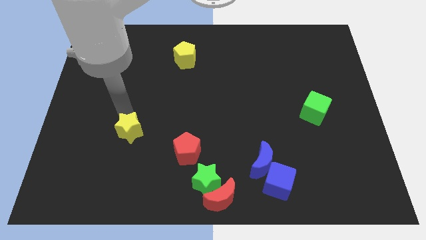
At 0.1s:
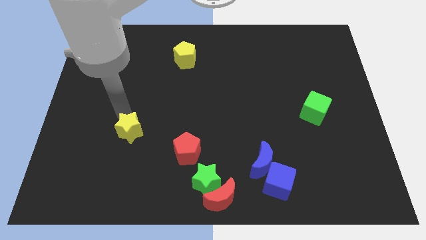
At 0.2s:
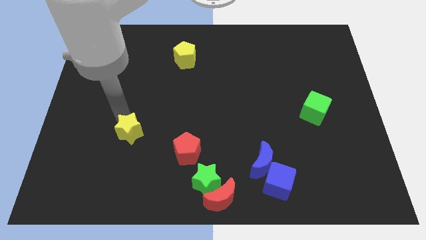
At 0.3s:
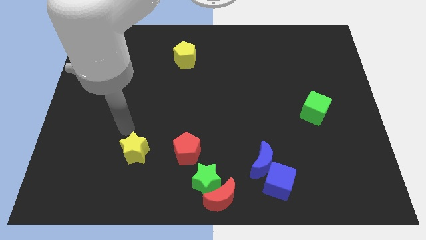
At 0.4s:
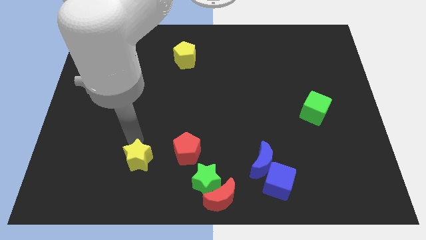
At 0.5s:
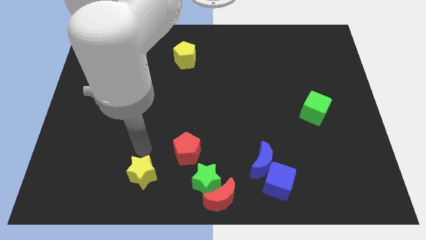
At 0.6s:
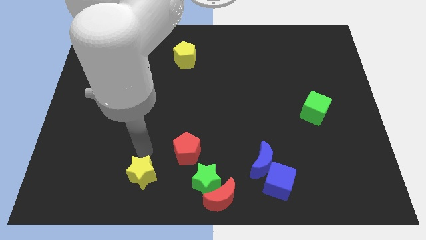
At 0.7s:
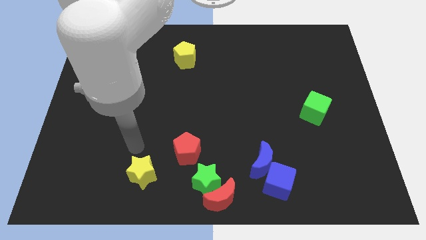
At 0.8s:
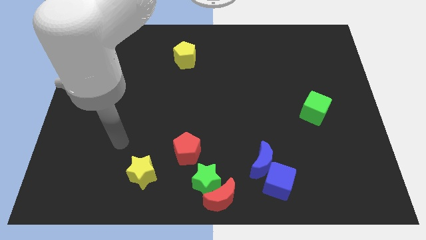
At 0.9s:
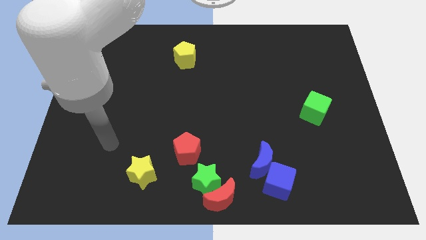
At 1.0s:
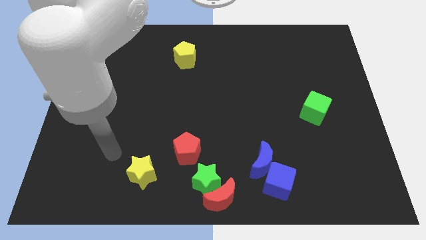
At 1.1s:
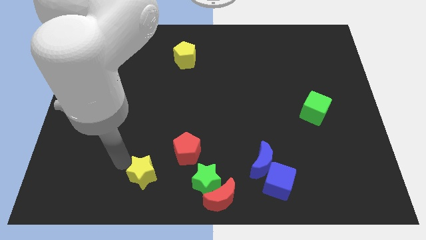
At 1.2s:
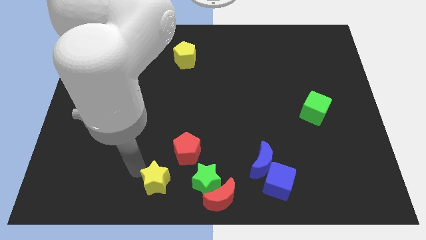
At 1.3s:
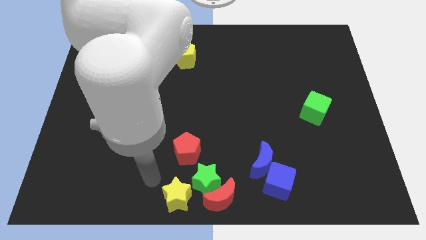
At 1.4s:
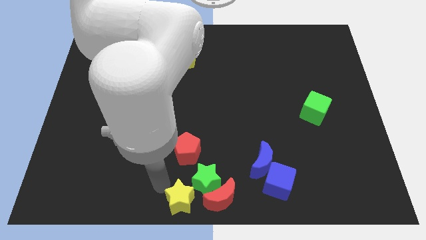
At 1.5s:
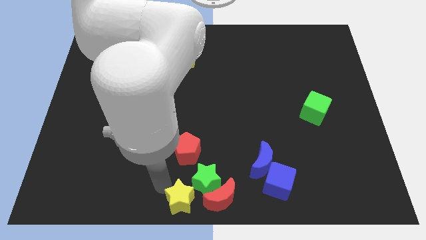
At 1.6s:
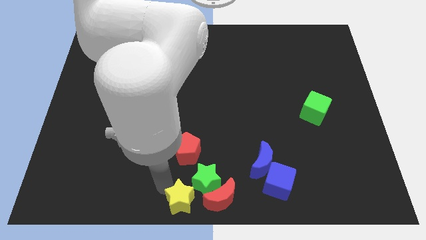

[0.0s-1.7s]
place the yellow star left to red crescent

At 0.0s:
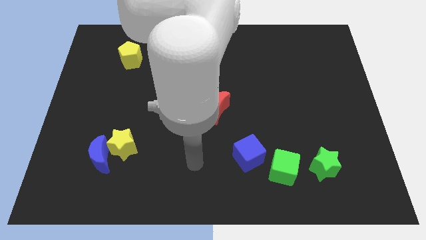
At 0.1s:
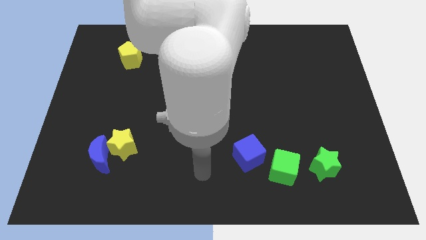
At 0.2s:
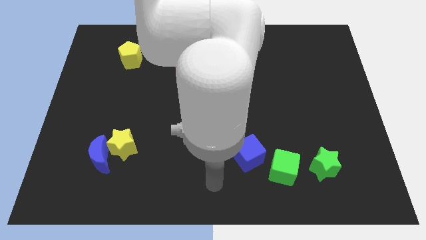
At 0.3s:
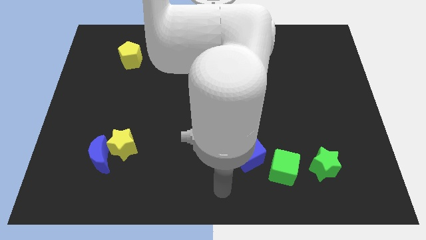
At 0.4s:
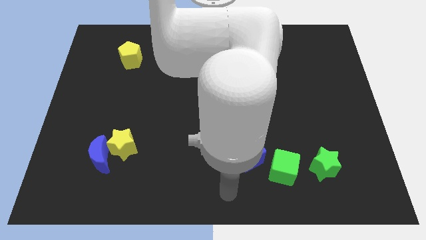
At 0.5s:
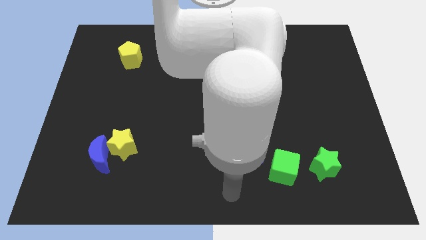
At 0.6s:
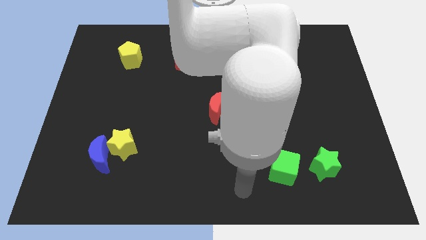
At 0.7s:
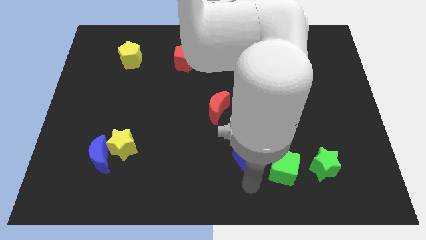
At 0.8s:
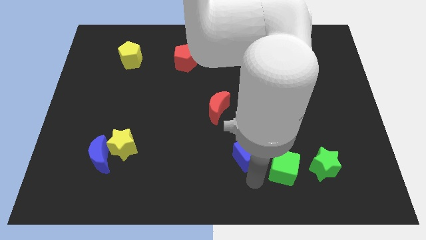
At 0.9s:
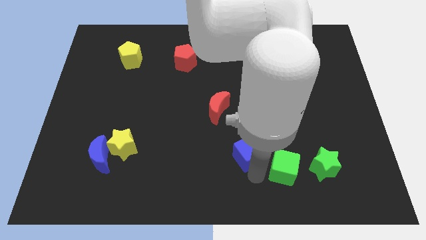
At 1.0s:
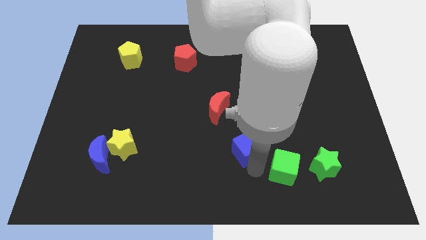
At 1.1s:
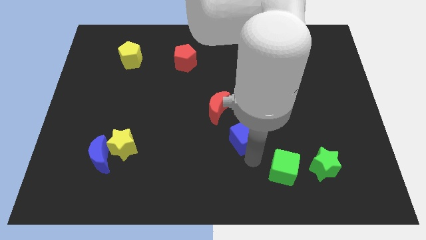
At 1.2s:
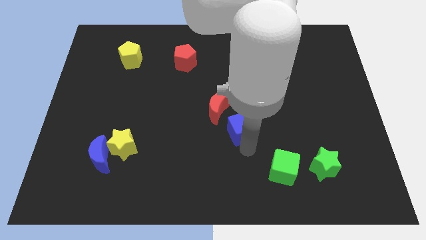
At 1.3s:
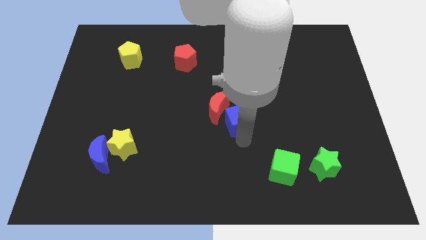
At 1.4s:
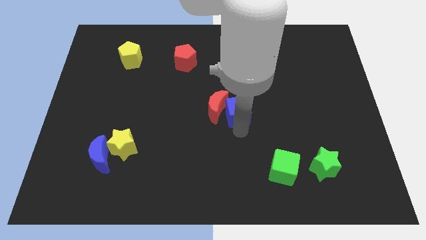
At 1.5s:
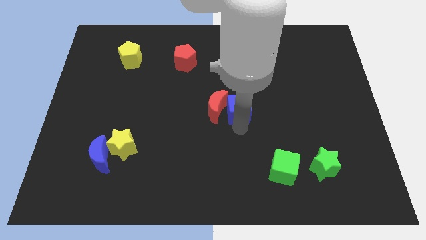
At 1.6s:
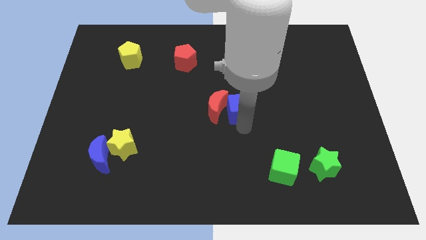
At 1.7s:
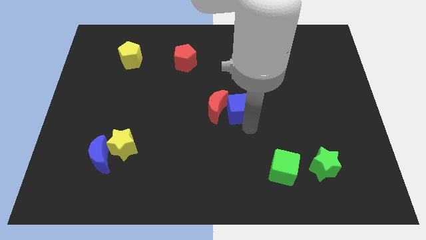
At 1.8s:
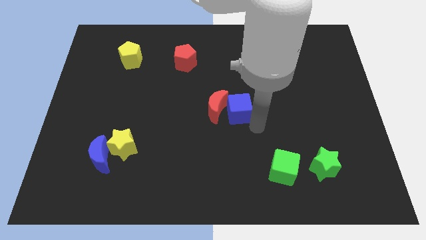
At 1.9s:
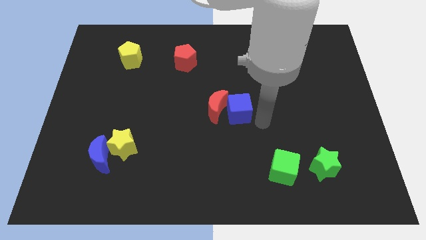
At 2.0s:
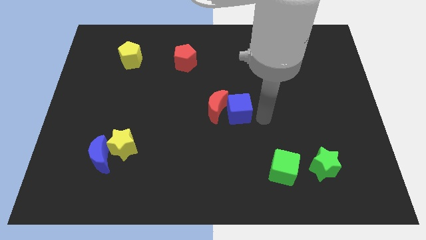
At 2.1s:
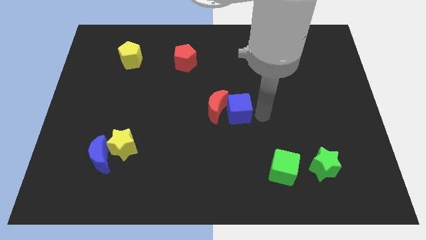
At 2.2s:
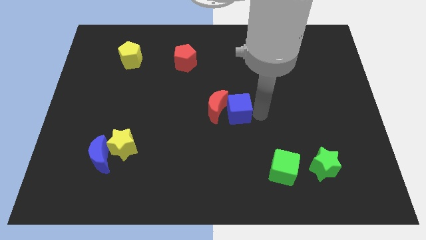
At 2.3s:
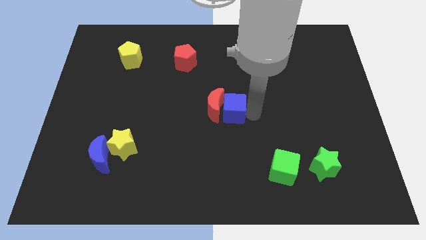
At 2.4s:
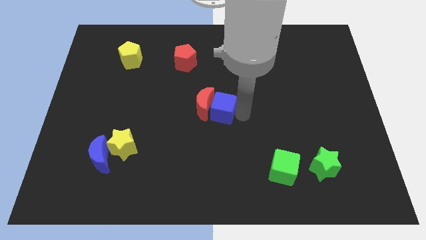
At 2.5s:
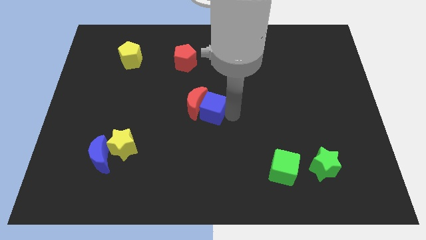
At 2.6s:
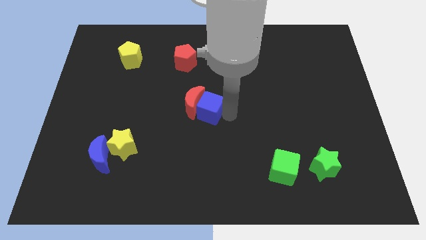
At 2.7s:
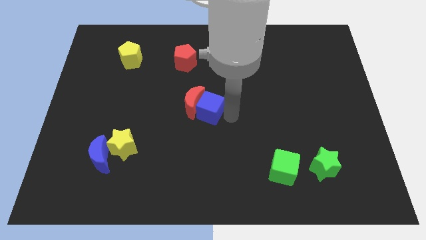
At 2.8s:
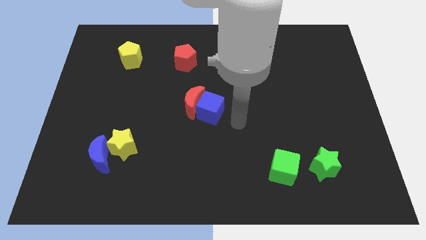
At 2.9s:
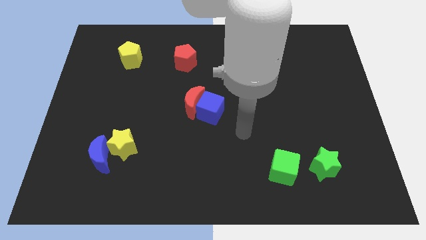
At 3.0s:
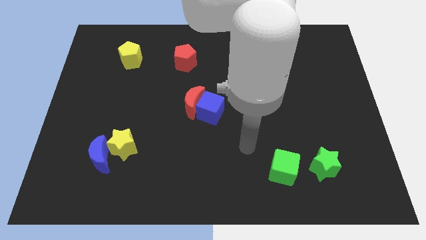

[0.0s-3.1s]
push the blue cube into the red moon

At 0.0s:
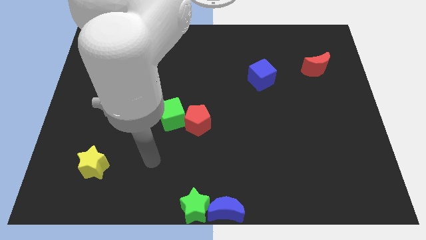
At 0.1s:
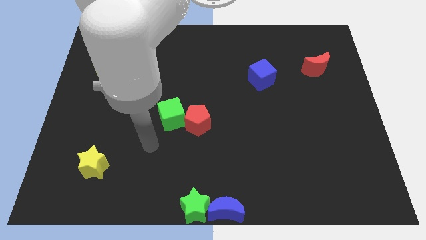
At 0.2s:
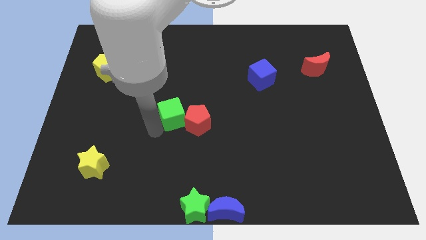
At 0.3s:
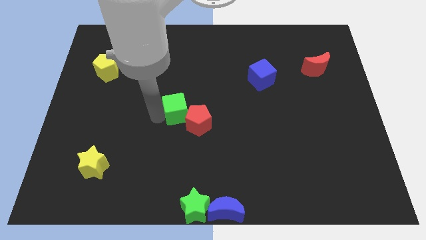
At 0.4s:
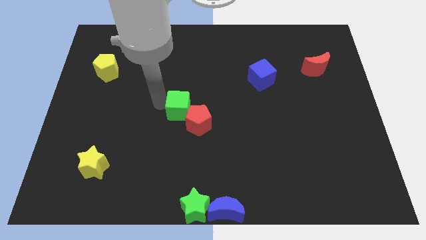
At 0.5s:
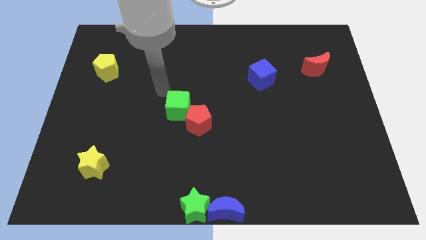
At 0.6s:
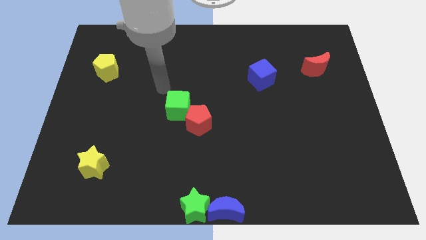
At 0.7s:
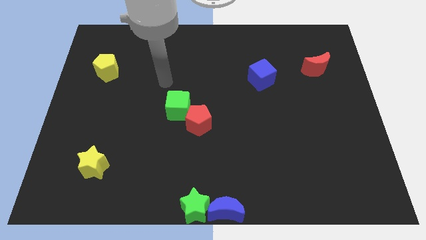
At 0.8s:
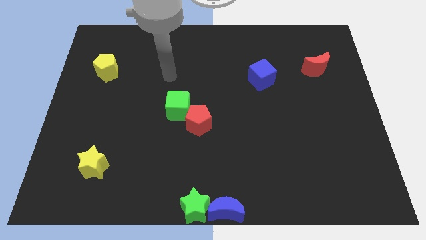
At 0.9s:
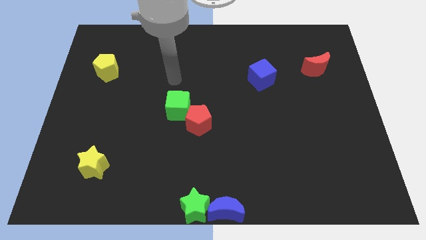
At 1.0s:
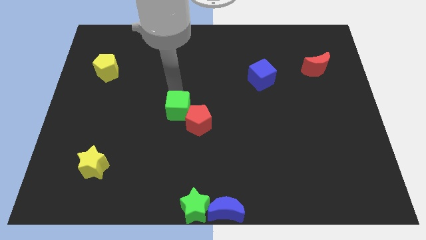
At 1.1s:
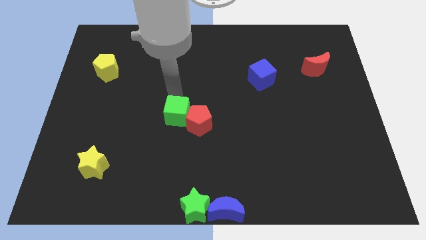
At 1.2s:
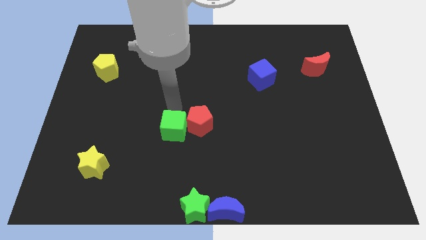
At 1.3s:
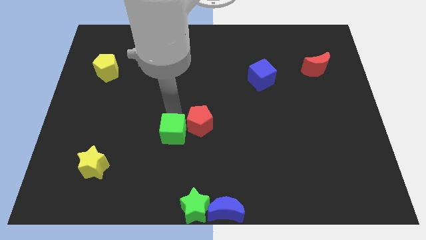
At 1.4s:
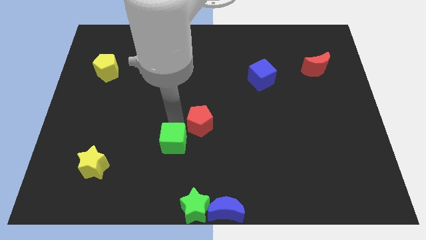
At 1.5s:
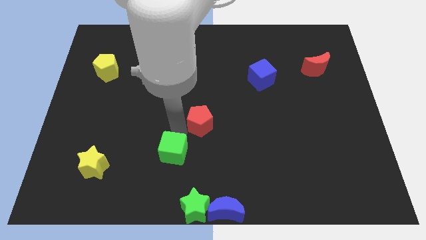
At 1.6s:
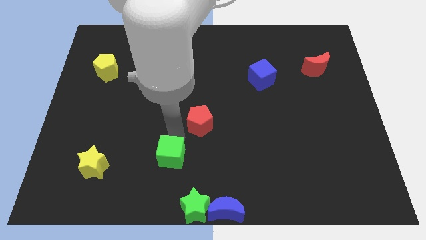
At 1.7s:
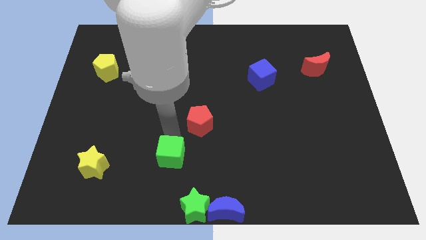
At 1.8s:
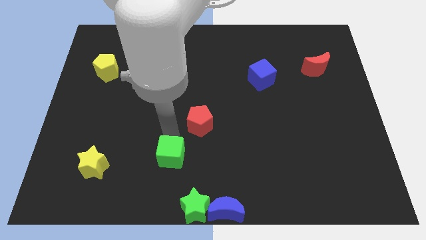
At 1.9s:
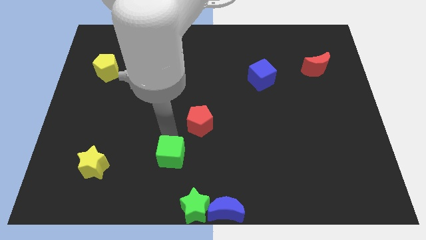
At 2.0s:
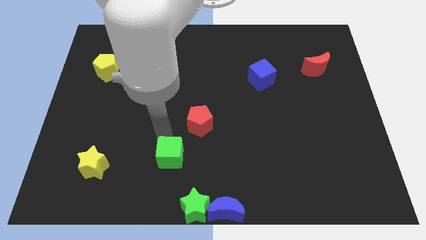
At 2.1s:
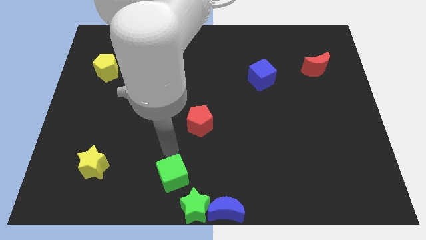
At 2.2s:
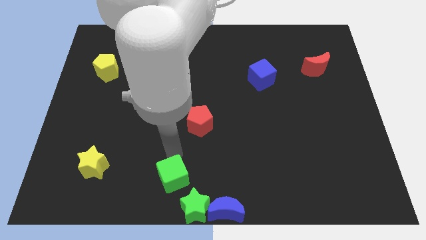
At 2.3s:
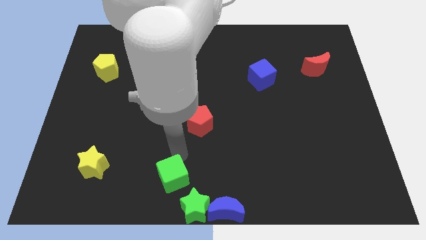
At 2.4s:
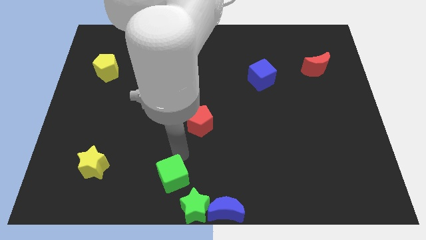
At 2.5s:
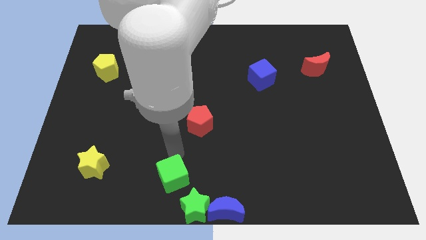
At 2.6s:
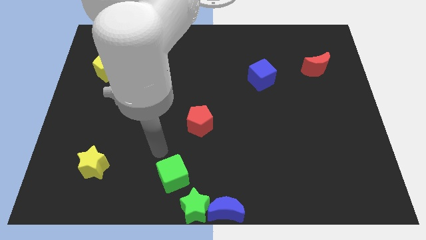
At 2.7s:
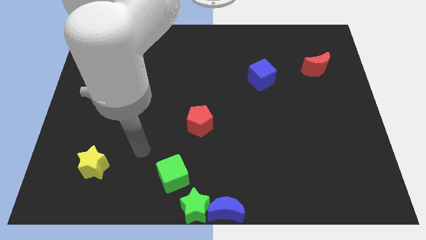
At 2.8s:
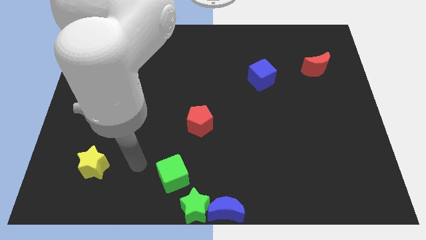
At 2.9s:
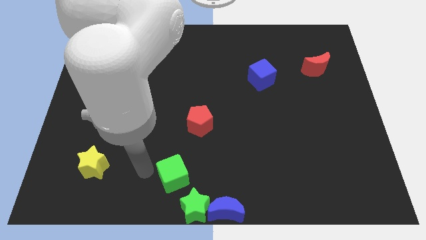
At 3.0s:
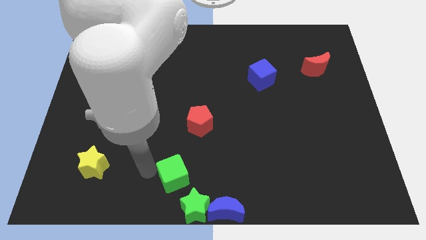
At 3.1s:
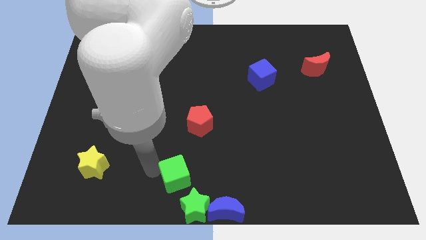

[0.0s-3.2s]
move the green cube away from the red pentagon

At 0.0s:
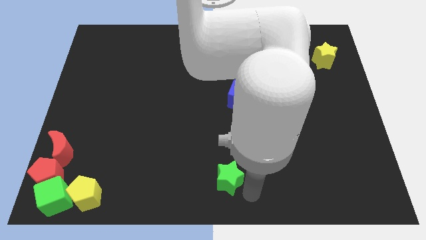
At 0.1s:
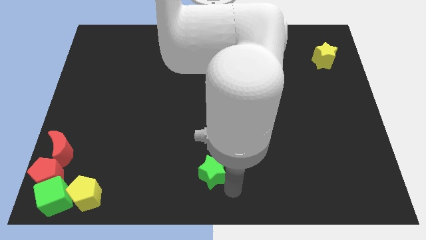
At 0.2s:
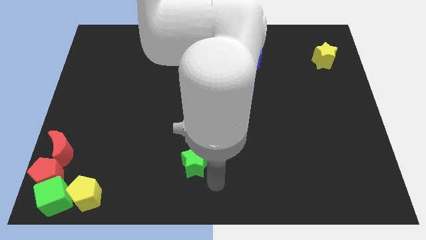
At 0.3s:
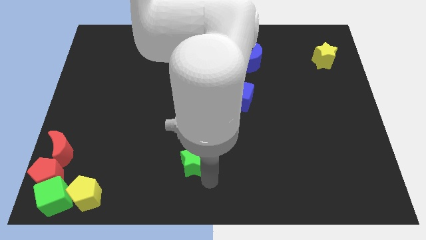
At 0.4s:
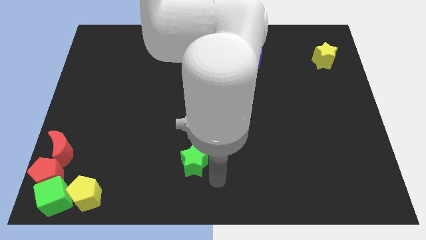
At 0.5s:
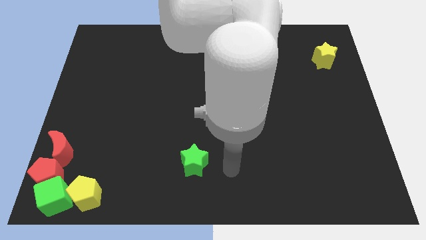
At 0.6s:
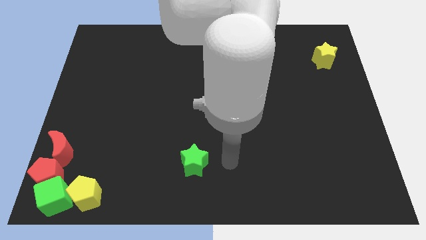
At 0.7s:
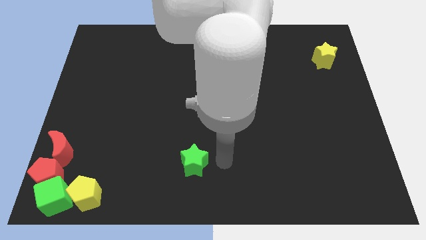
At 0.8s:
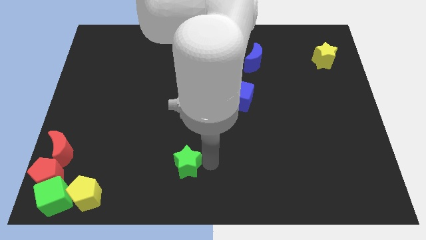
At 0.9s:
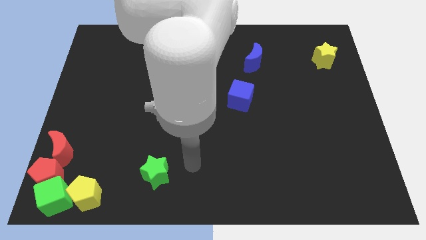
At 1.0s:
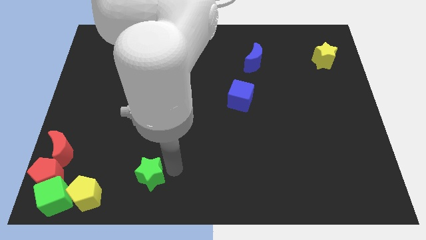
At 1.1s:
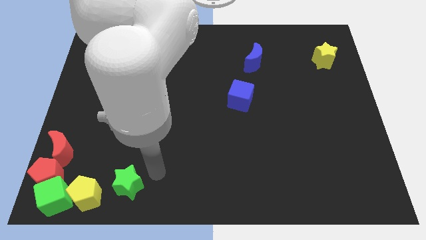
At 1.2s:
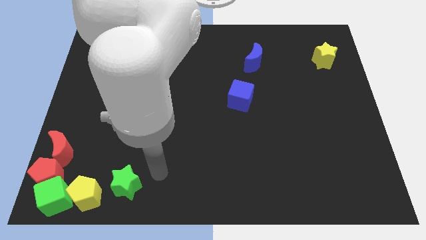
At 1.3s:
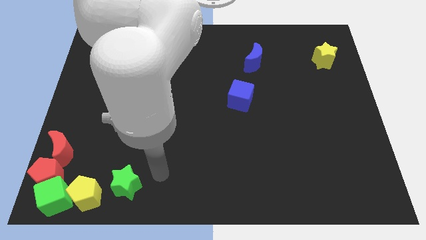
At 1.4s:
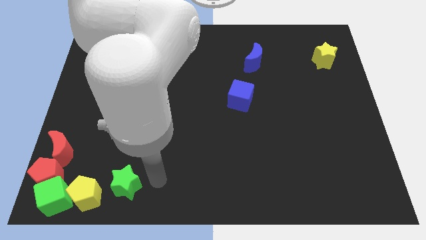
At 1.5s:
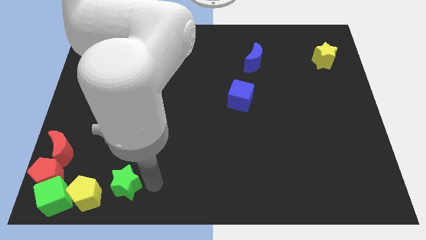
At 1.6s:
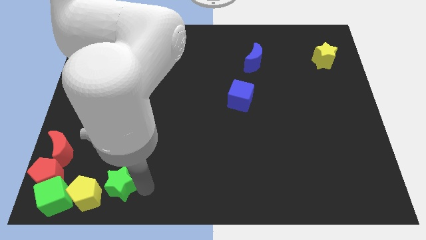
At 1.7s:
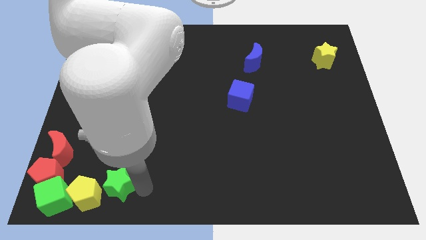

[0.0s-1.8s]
move the green star towards right of the yellow pentagon
